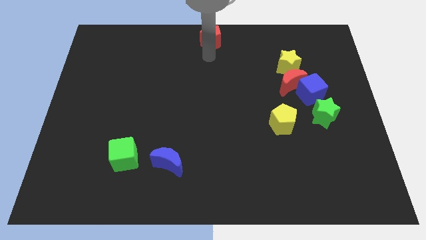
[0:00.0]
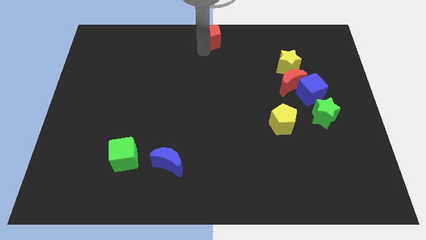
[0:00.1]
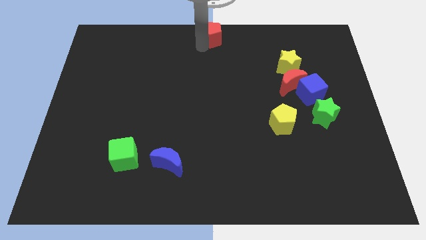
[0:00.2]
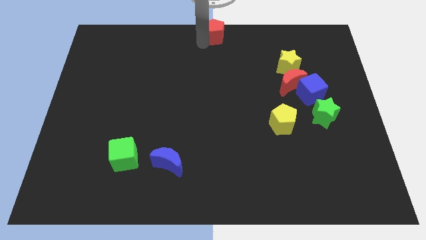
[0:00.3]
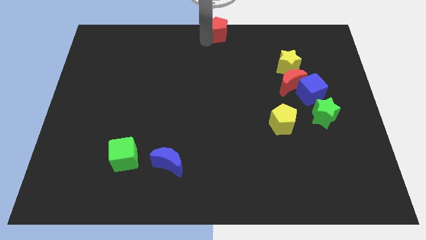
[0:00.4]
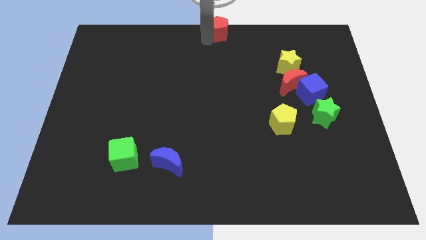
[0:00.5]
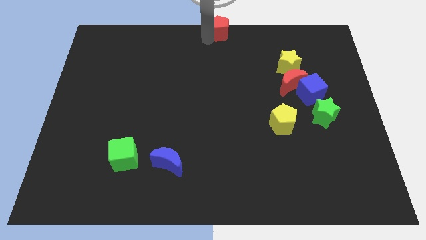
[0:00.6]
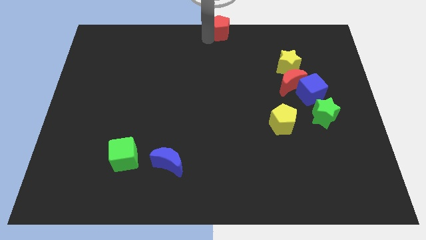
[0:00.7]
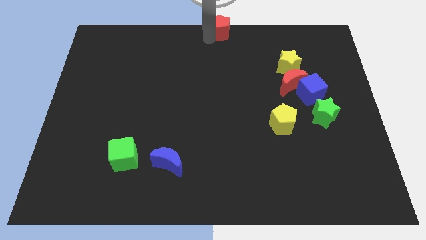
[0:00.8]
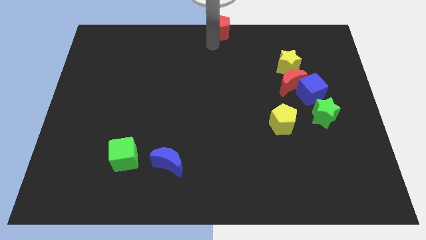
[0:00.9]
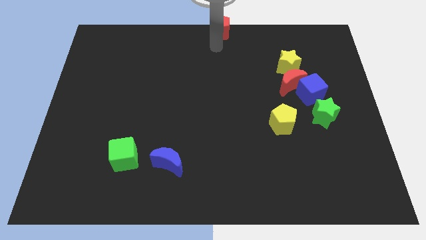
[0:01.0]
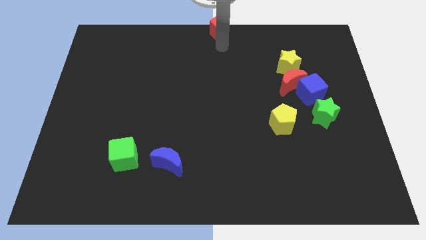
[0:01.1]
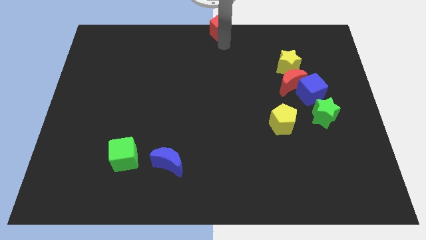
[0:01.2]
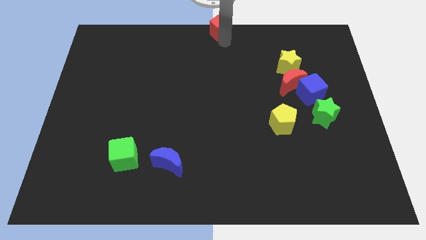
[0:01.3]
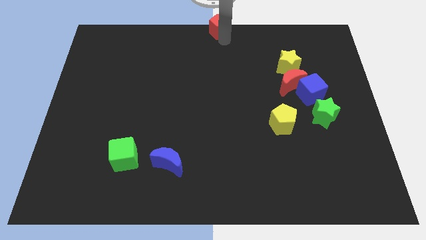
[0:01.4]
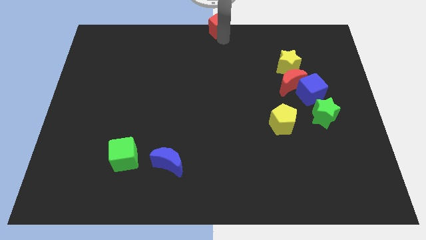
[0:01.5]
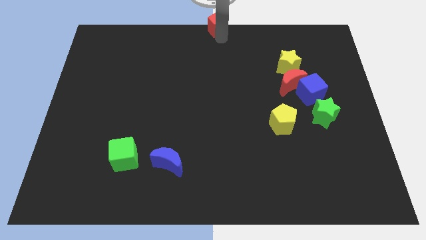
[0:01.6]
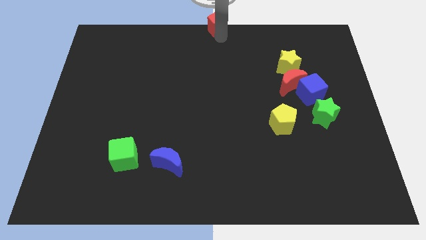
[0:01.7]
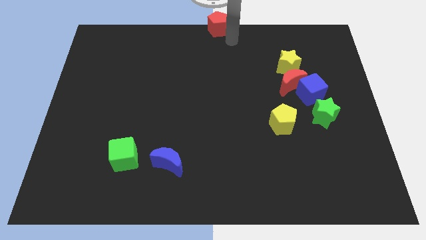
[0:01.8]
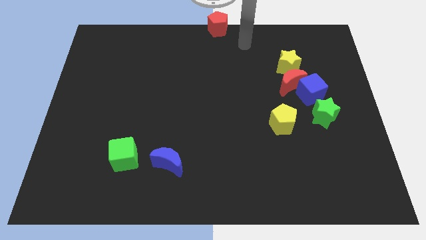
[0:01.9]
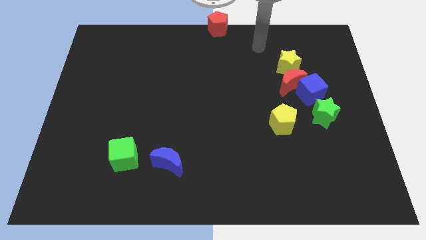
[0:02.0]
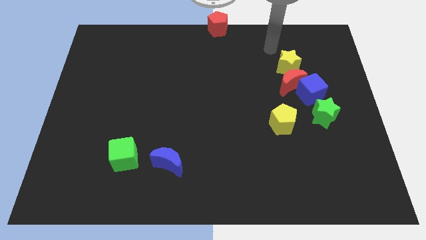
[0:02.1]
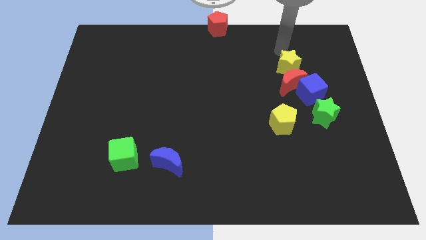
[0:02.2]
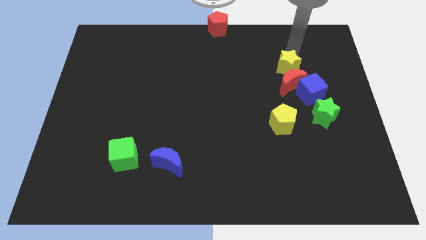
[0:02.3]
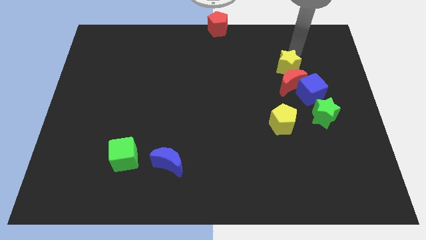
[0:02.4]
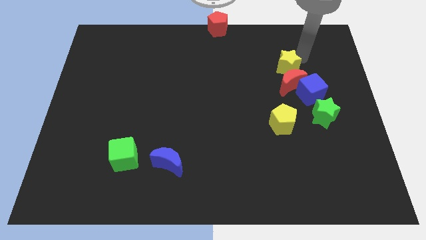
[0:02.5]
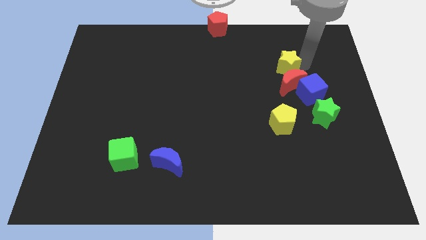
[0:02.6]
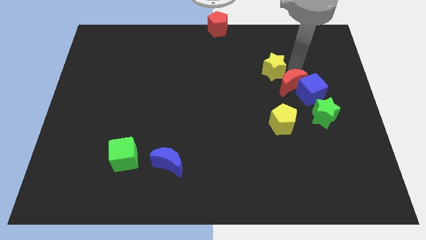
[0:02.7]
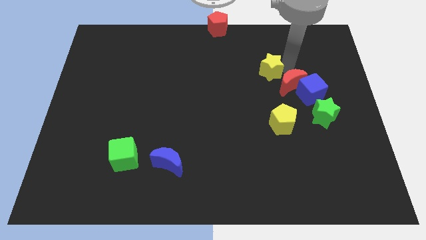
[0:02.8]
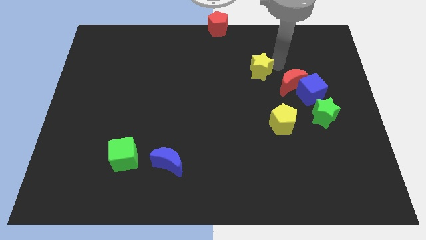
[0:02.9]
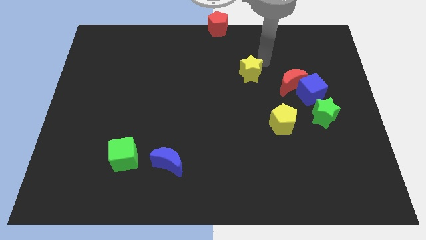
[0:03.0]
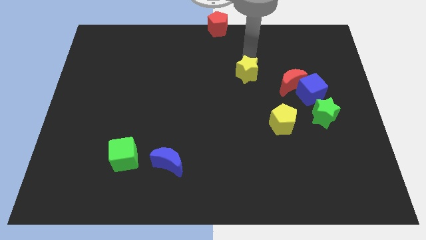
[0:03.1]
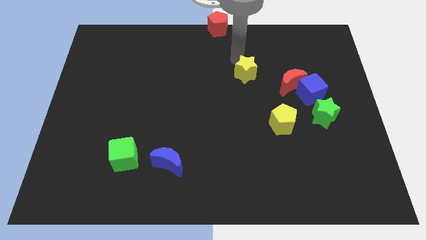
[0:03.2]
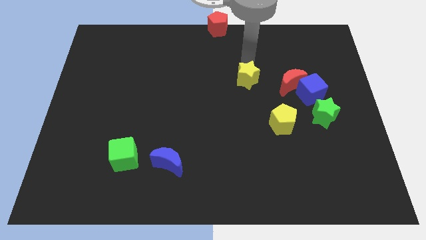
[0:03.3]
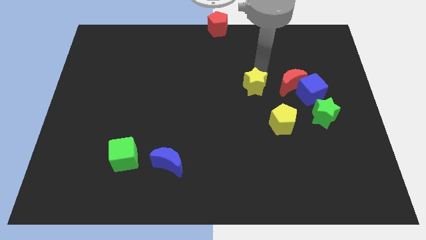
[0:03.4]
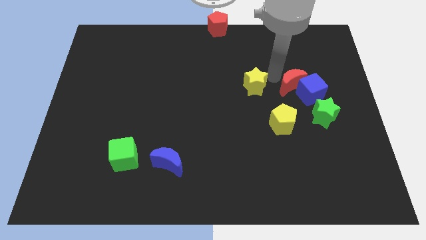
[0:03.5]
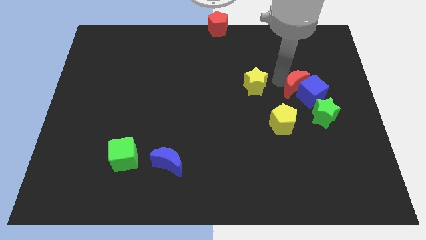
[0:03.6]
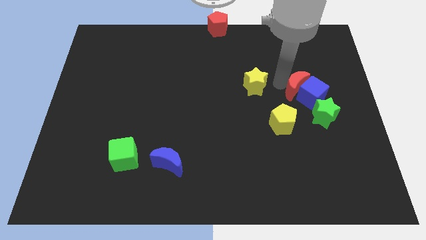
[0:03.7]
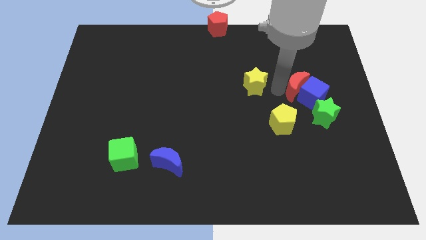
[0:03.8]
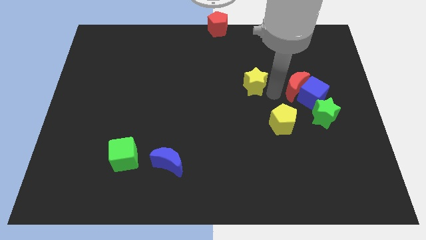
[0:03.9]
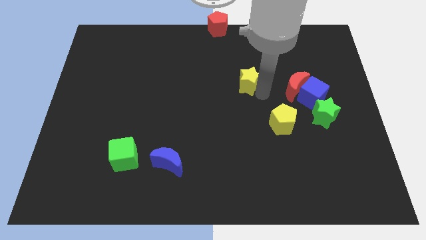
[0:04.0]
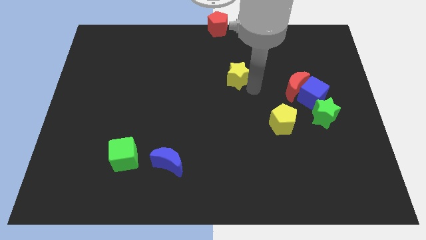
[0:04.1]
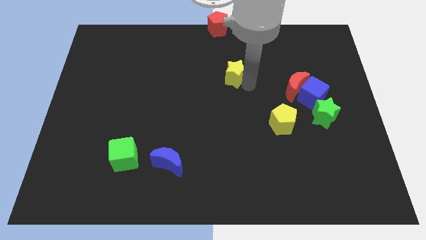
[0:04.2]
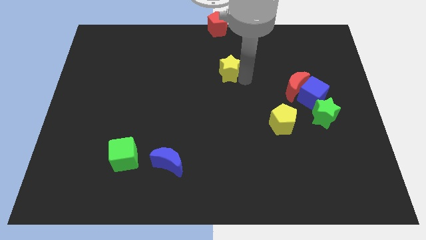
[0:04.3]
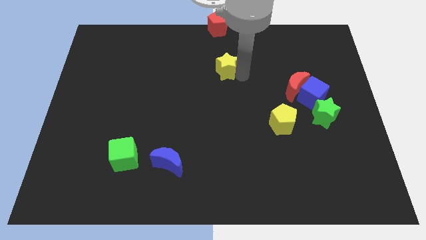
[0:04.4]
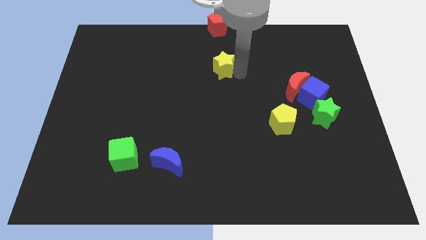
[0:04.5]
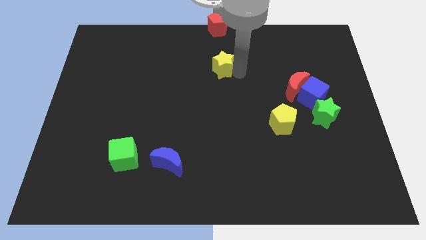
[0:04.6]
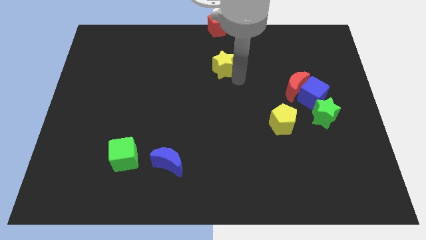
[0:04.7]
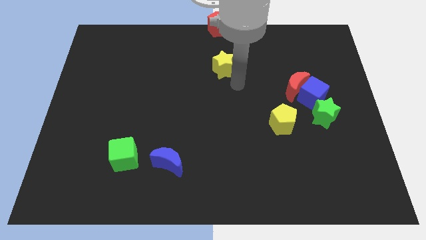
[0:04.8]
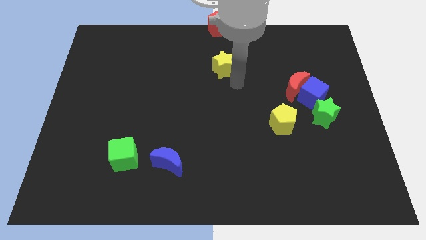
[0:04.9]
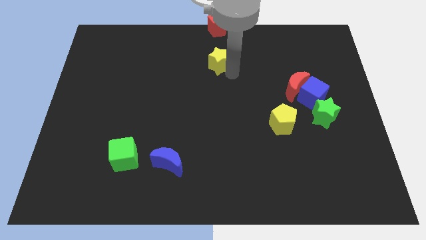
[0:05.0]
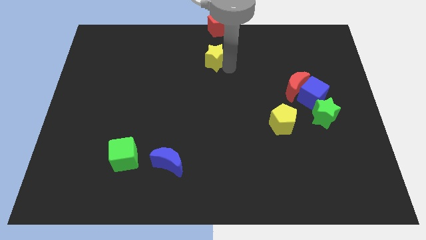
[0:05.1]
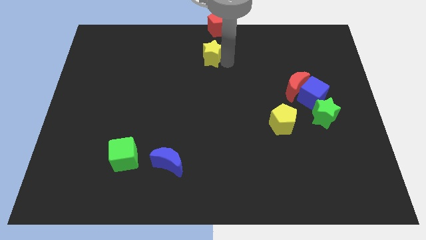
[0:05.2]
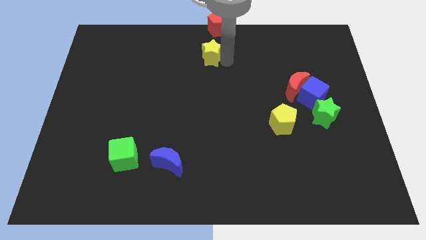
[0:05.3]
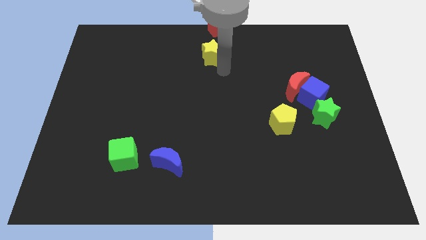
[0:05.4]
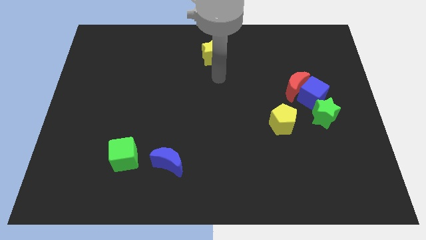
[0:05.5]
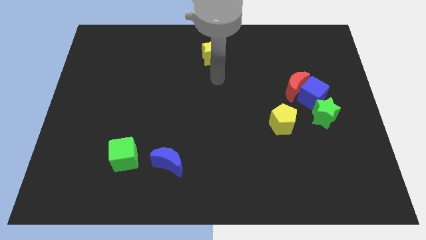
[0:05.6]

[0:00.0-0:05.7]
move the yellow star below the red pentagon

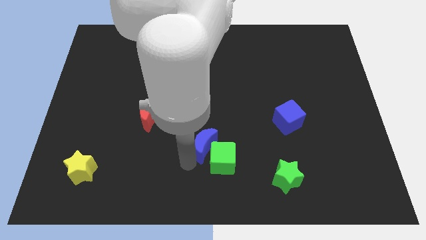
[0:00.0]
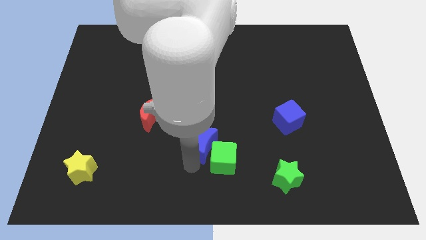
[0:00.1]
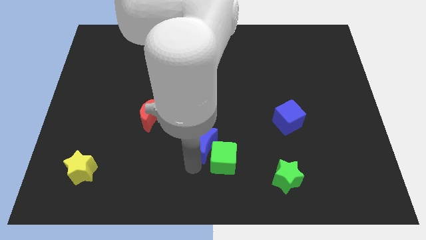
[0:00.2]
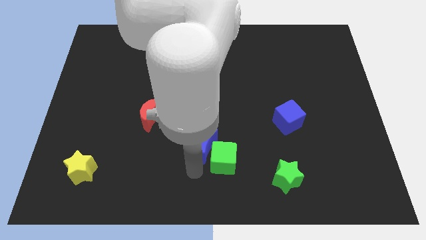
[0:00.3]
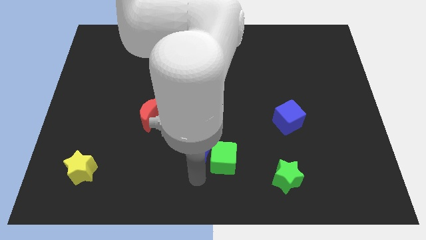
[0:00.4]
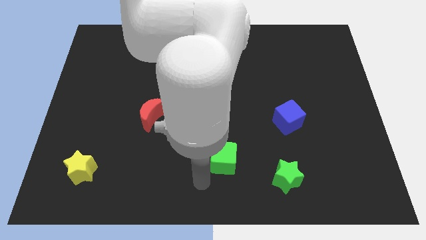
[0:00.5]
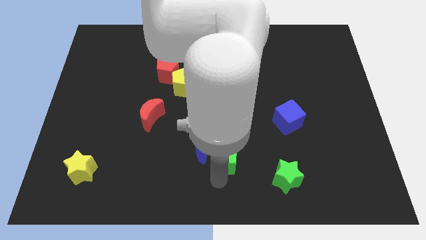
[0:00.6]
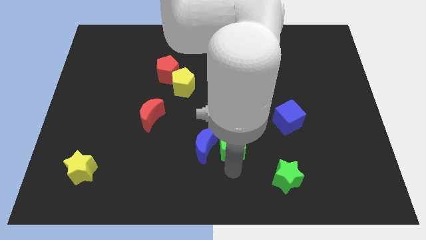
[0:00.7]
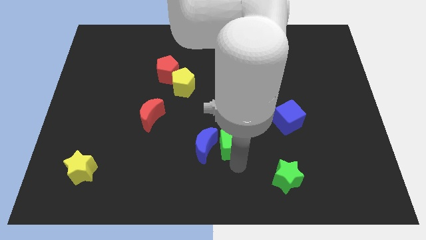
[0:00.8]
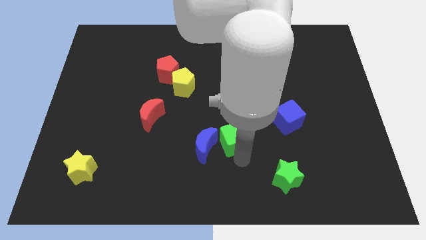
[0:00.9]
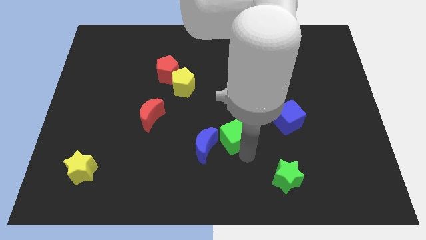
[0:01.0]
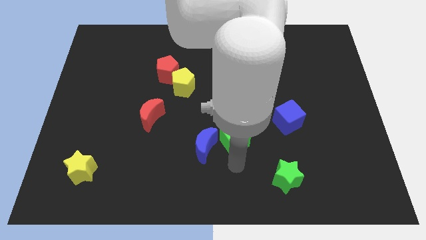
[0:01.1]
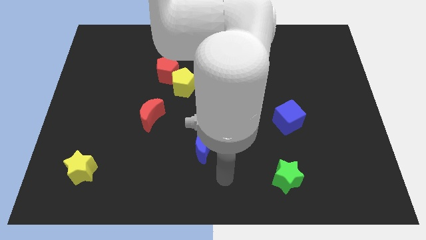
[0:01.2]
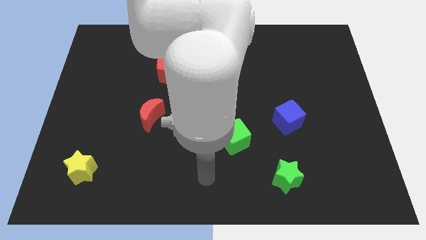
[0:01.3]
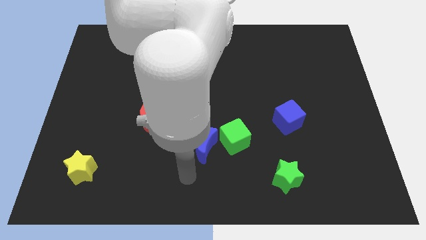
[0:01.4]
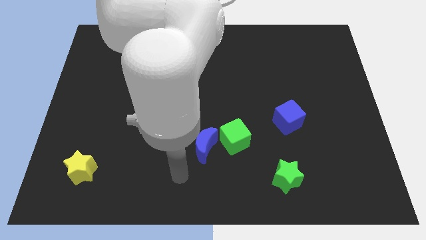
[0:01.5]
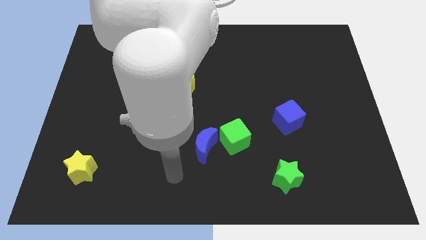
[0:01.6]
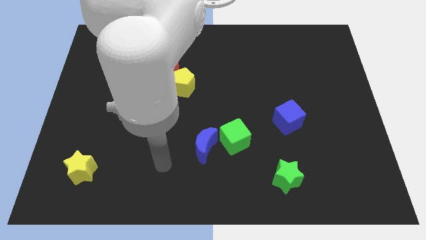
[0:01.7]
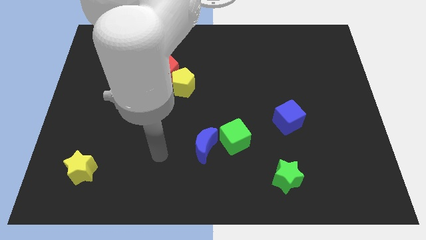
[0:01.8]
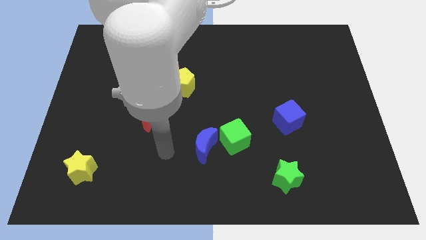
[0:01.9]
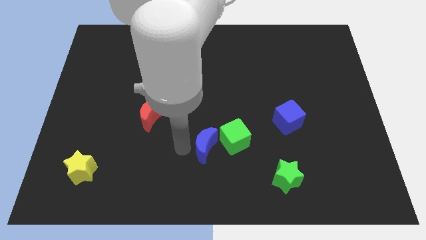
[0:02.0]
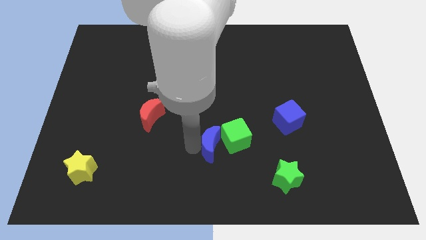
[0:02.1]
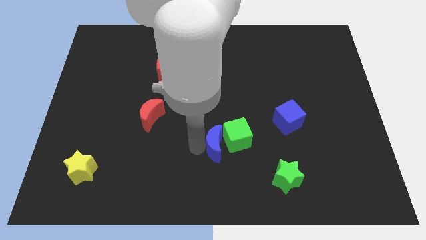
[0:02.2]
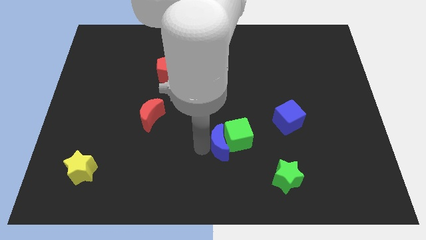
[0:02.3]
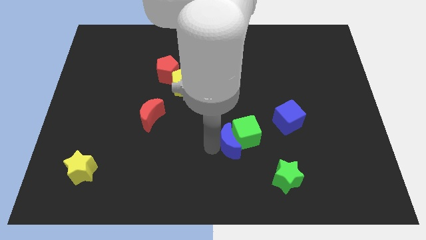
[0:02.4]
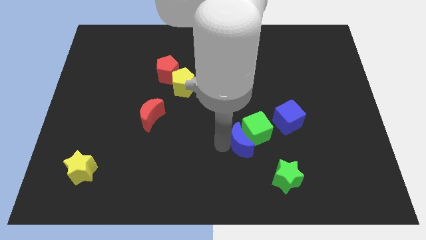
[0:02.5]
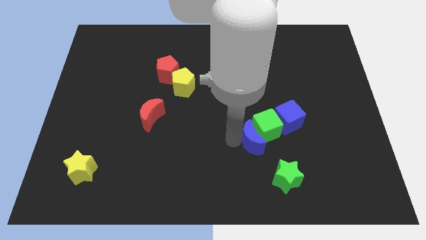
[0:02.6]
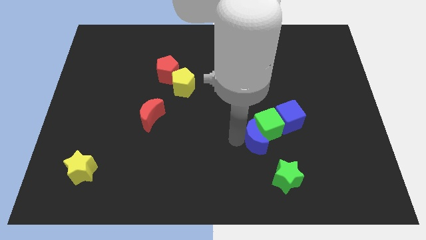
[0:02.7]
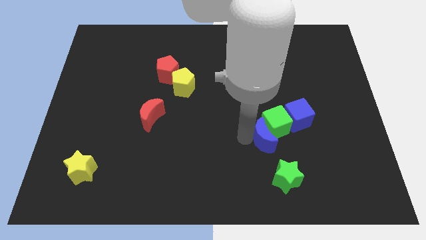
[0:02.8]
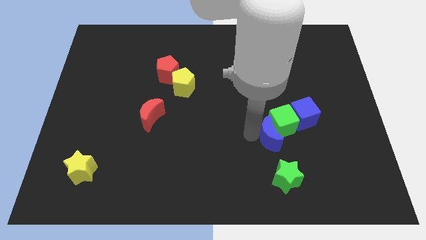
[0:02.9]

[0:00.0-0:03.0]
push blue crescent to the green cube

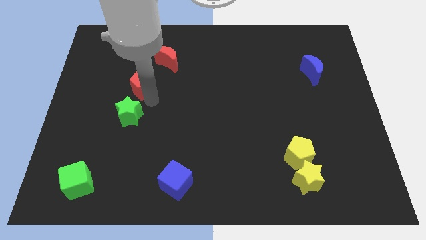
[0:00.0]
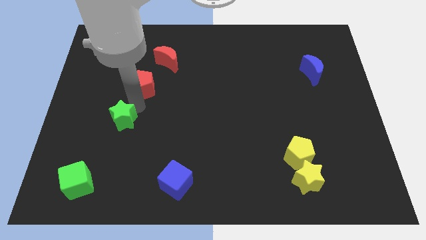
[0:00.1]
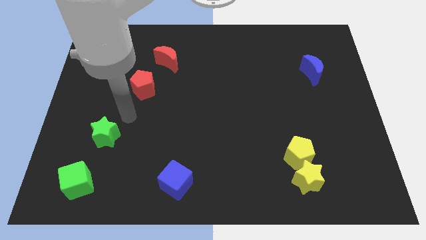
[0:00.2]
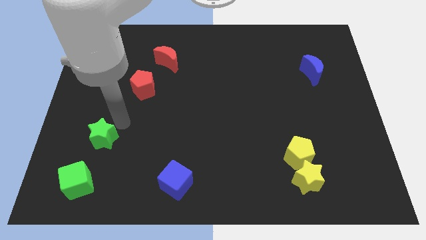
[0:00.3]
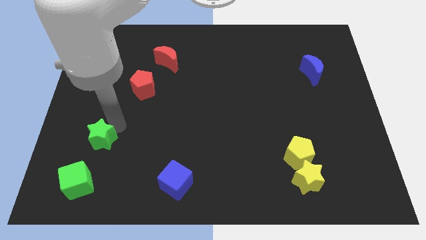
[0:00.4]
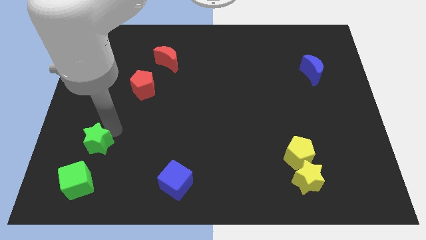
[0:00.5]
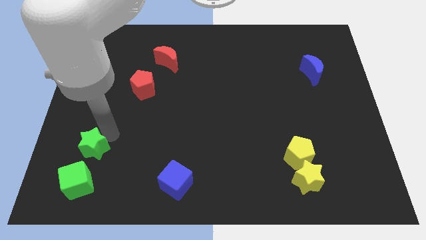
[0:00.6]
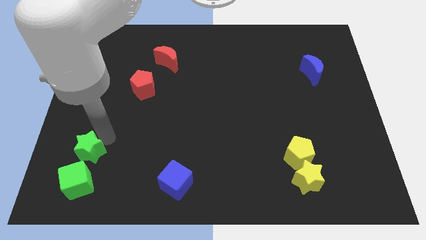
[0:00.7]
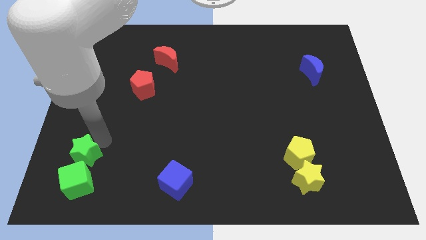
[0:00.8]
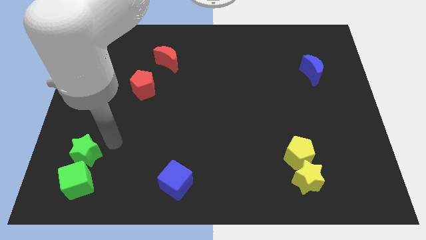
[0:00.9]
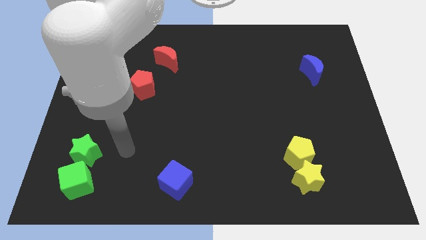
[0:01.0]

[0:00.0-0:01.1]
push green star towards green cube
